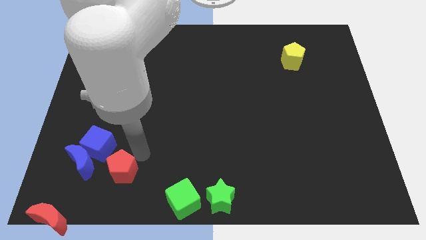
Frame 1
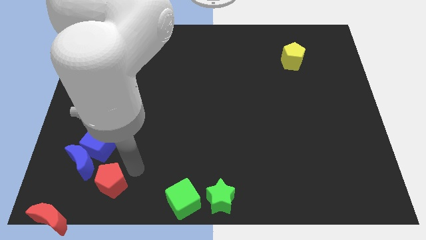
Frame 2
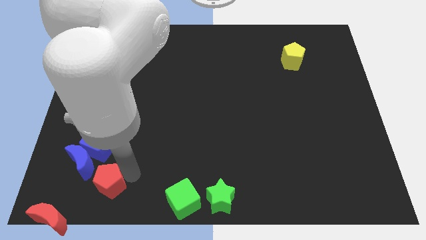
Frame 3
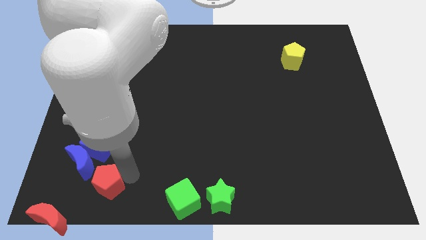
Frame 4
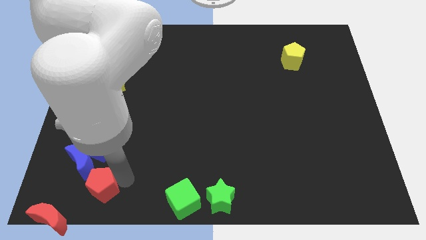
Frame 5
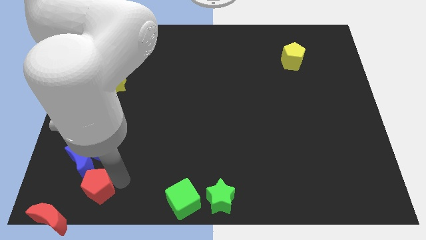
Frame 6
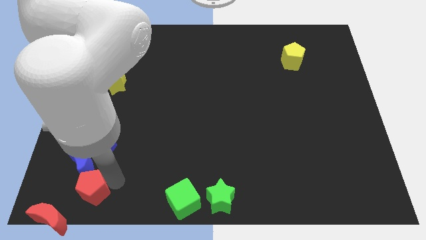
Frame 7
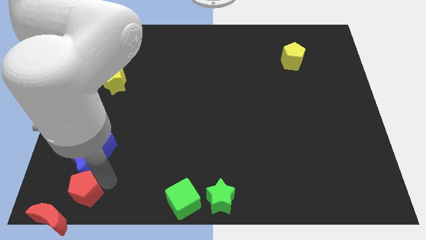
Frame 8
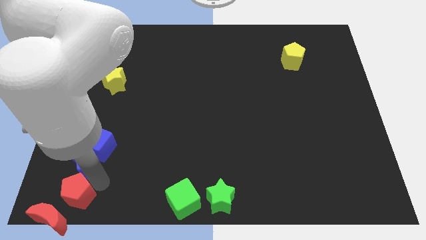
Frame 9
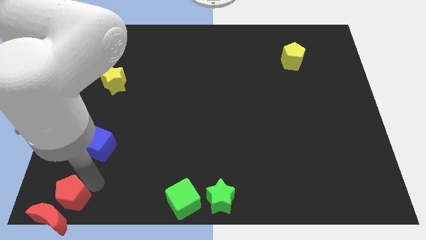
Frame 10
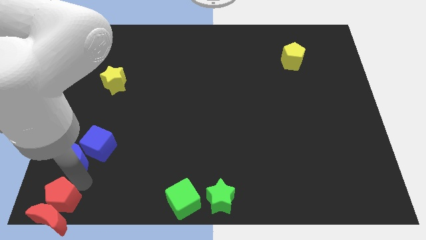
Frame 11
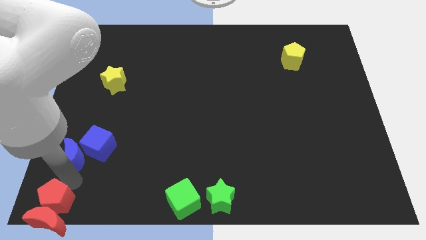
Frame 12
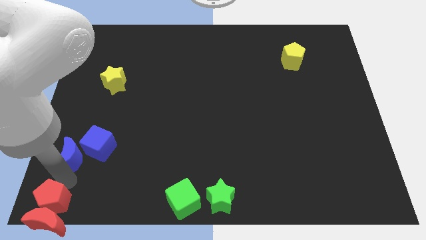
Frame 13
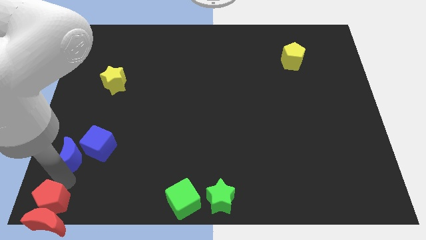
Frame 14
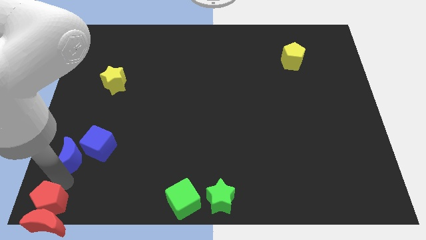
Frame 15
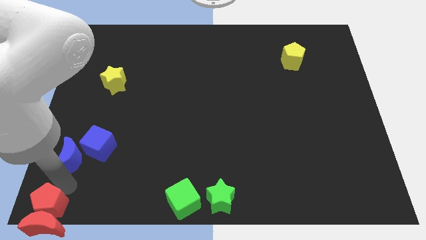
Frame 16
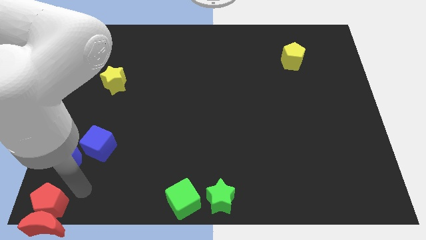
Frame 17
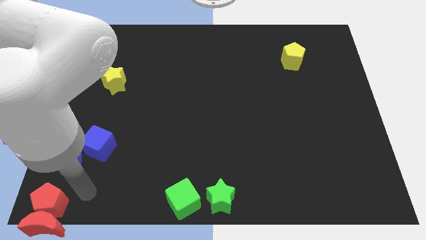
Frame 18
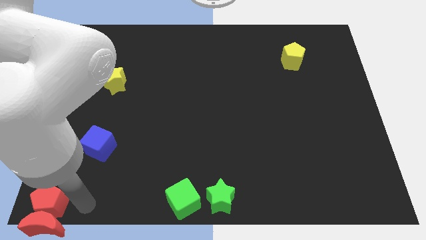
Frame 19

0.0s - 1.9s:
push the red pentagon into the red moon

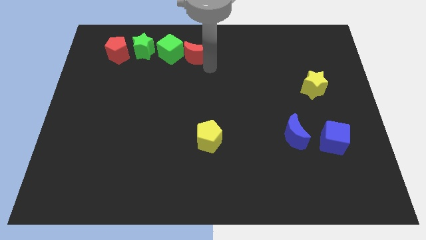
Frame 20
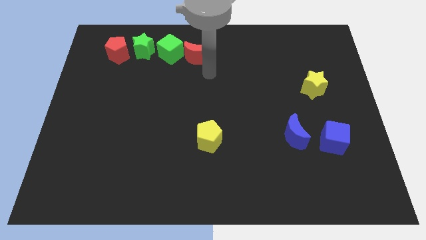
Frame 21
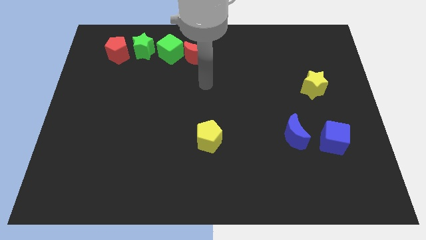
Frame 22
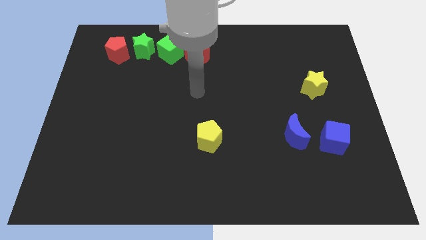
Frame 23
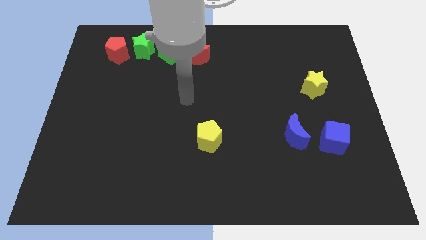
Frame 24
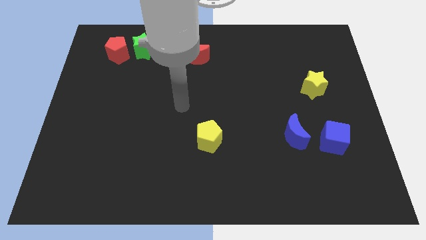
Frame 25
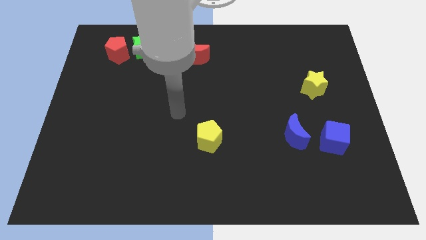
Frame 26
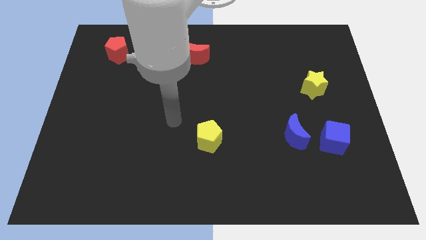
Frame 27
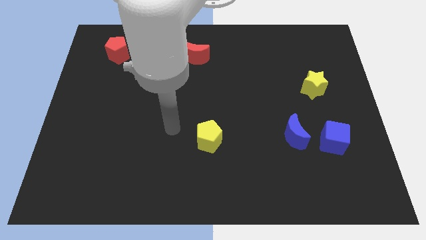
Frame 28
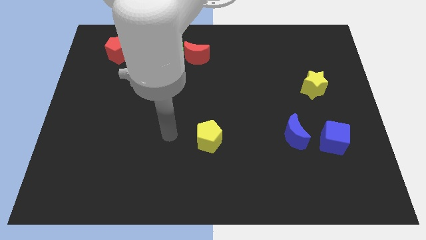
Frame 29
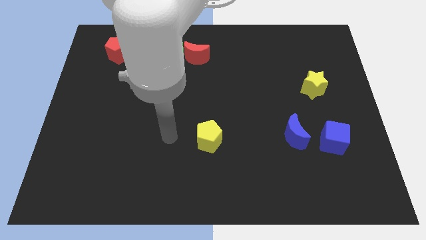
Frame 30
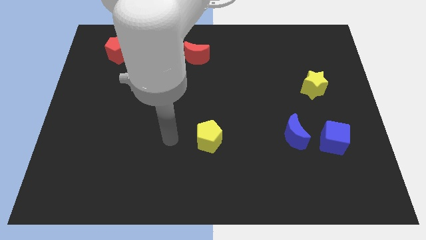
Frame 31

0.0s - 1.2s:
go away from the red moon

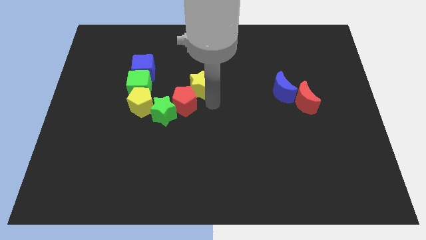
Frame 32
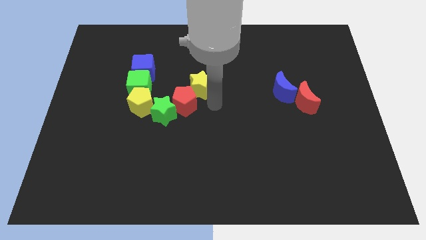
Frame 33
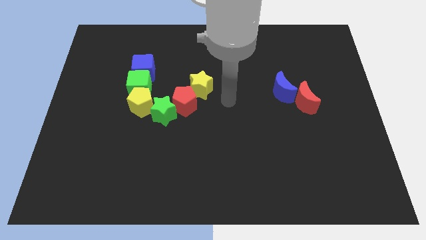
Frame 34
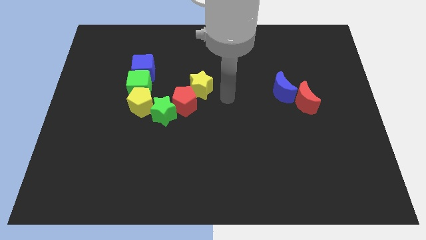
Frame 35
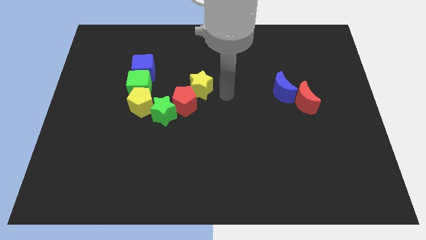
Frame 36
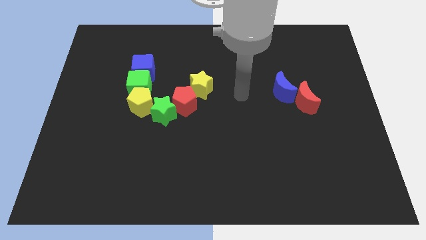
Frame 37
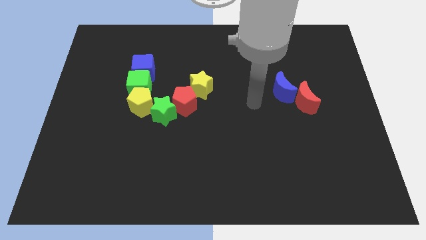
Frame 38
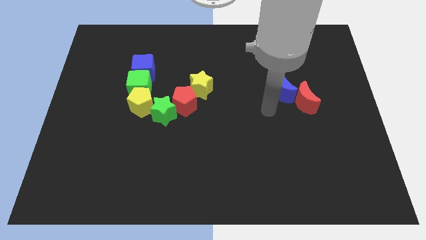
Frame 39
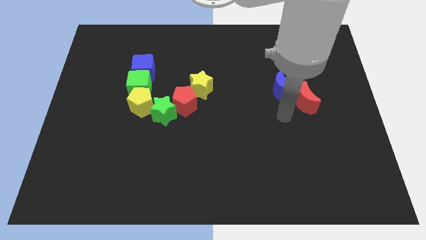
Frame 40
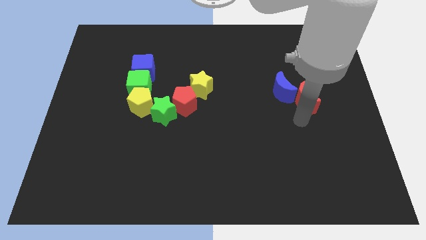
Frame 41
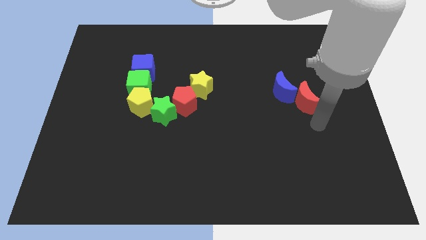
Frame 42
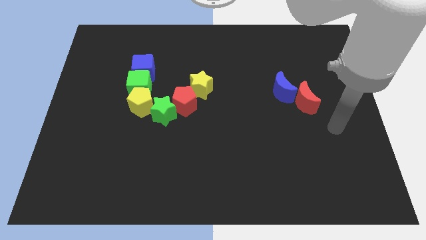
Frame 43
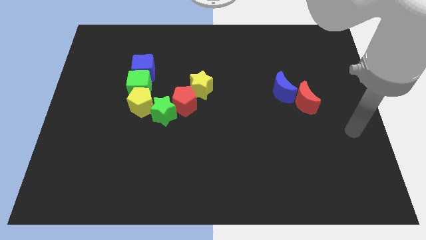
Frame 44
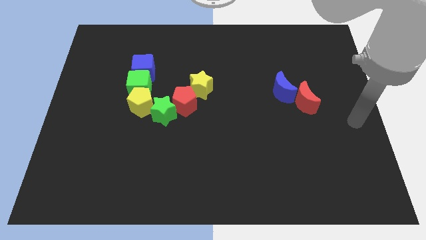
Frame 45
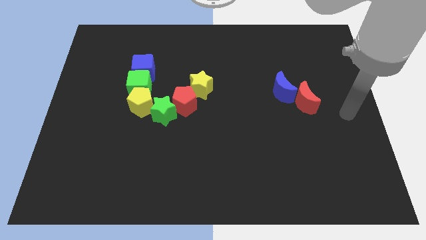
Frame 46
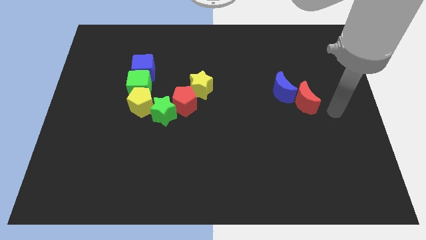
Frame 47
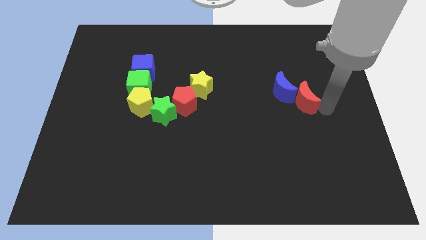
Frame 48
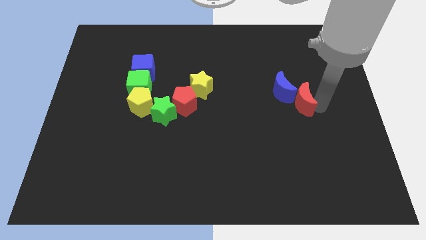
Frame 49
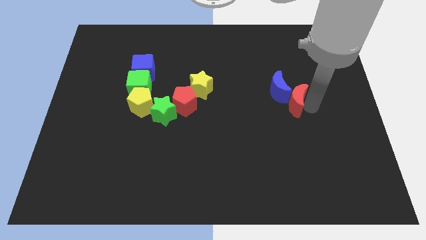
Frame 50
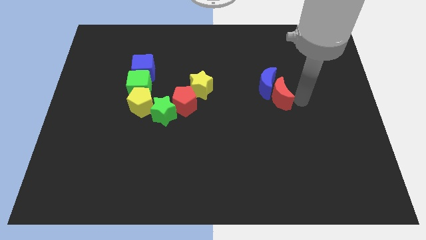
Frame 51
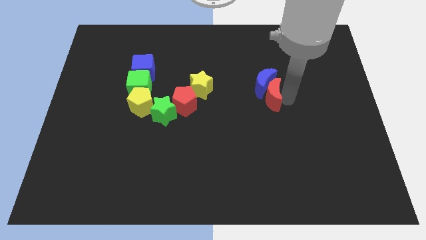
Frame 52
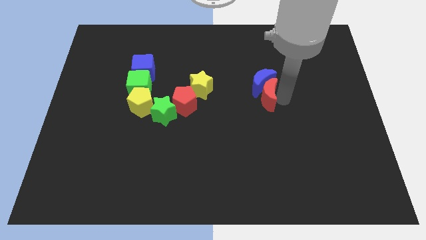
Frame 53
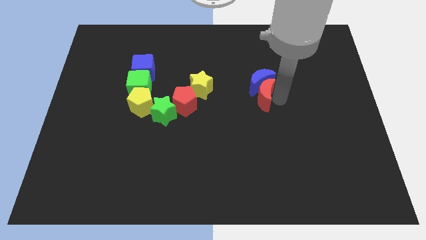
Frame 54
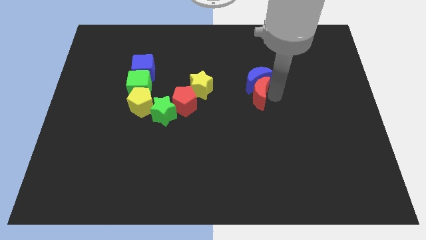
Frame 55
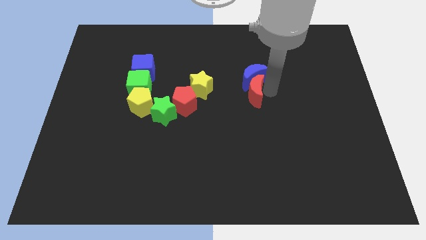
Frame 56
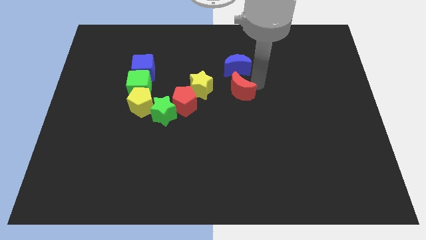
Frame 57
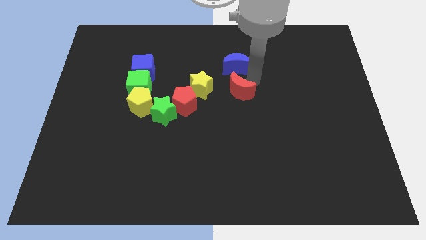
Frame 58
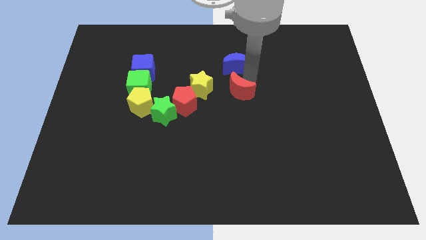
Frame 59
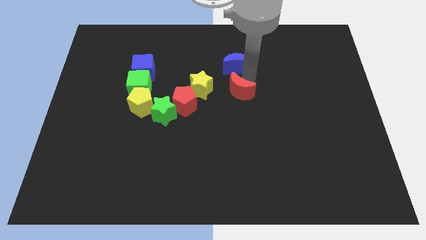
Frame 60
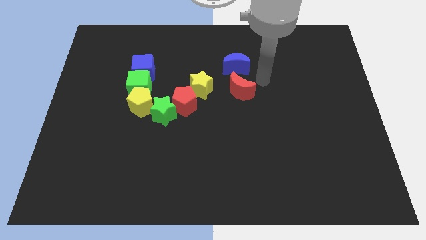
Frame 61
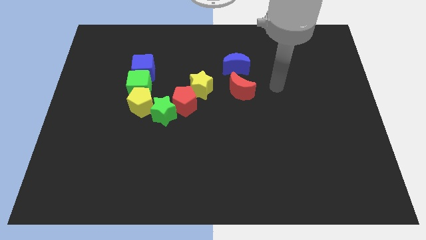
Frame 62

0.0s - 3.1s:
bring the red moon and blue moon at the right side of the yellow star

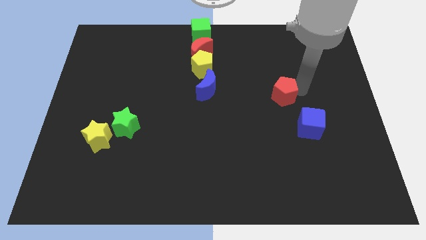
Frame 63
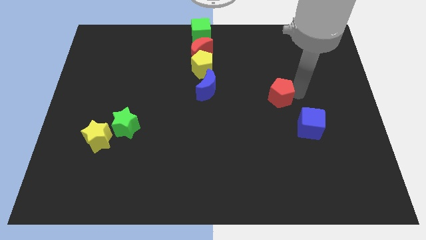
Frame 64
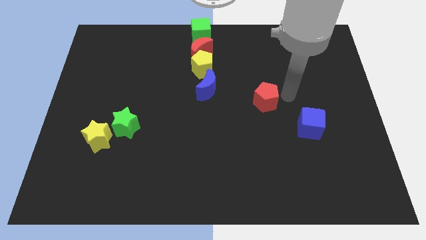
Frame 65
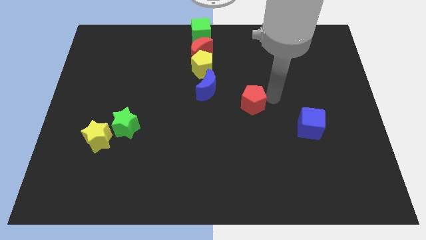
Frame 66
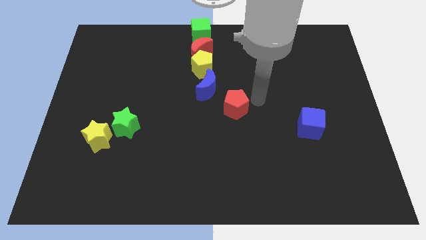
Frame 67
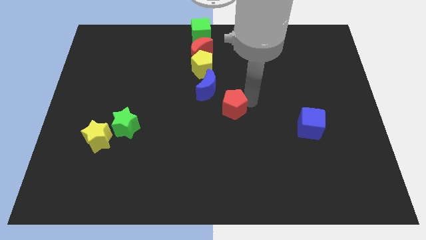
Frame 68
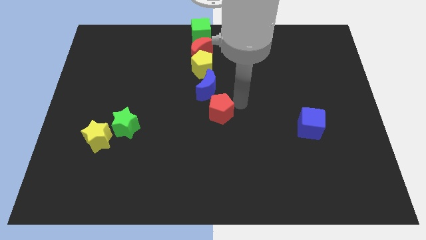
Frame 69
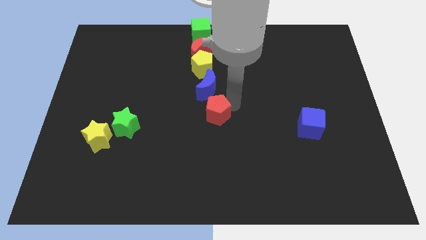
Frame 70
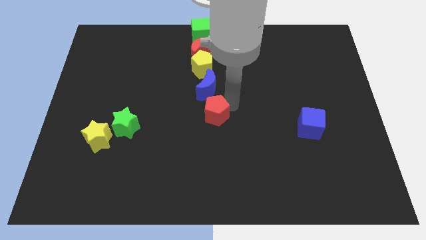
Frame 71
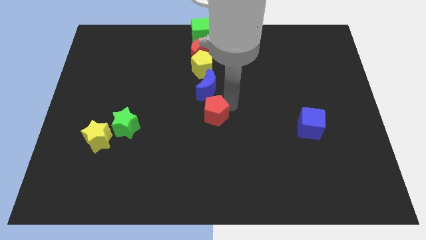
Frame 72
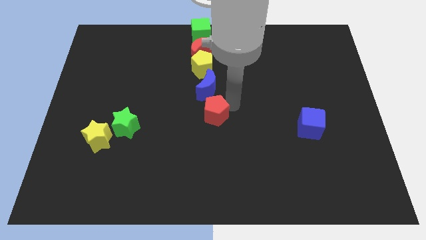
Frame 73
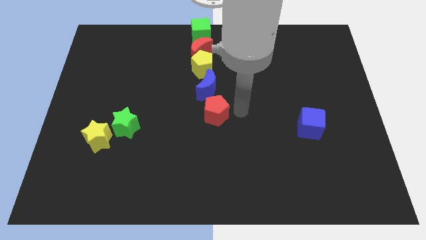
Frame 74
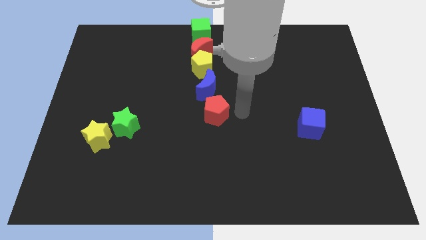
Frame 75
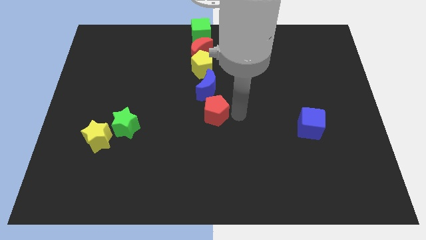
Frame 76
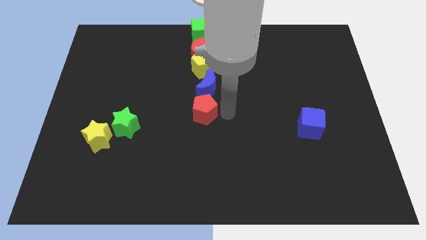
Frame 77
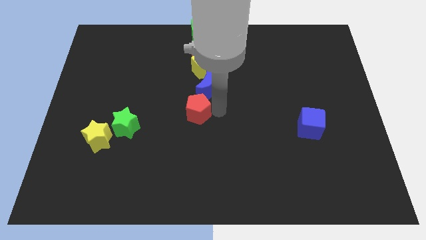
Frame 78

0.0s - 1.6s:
place the red pentagon to the bottom of the blue crescent

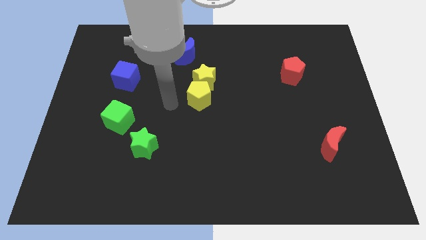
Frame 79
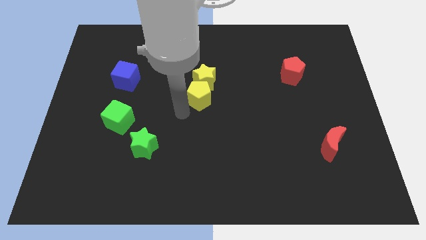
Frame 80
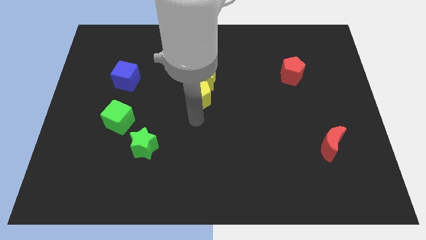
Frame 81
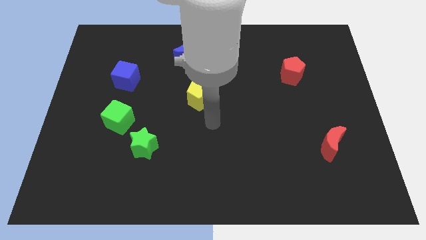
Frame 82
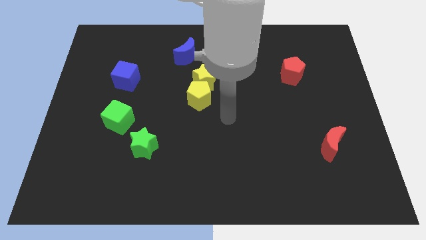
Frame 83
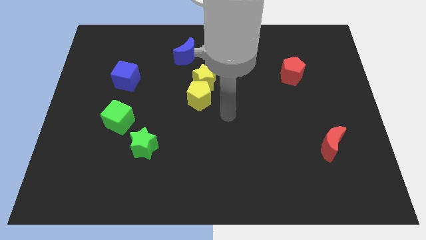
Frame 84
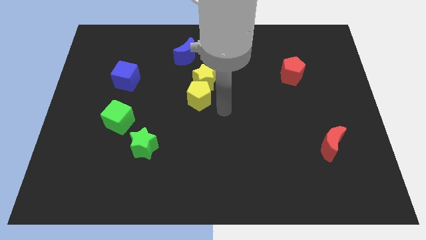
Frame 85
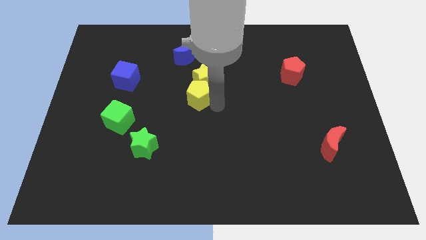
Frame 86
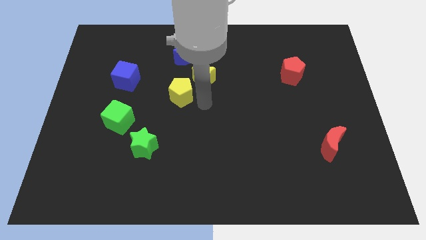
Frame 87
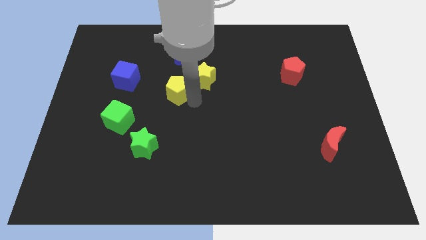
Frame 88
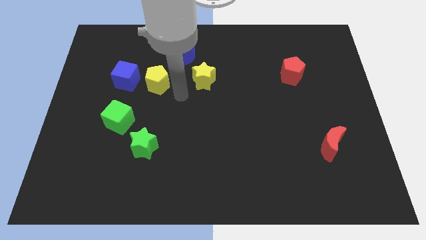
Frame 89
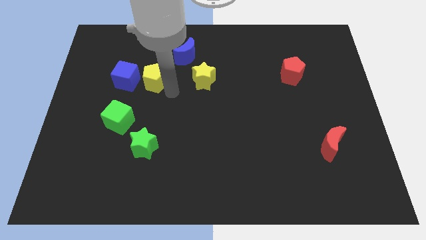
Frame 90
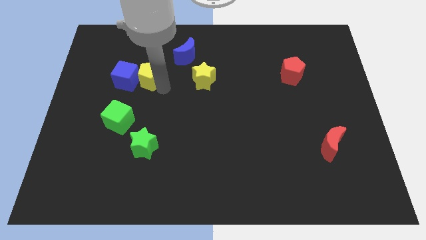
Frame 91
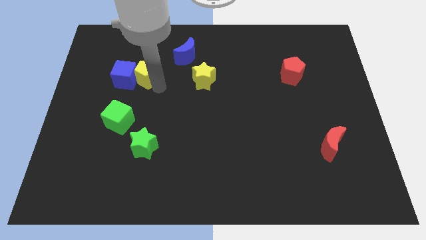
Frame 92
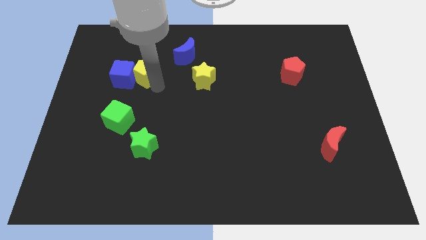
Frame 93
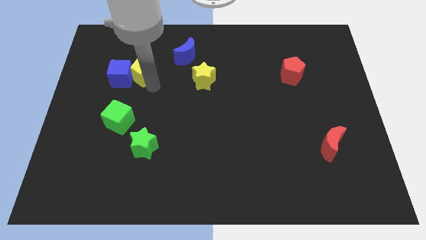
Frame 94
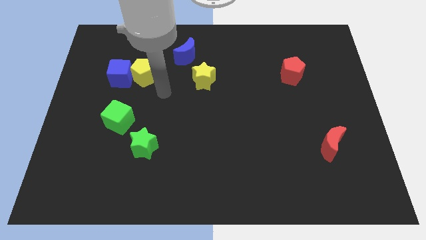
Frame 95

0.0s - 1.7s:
move the yellow pentagon into the blue cube
